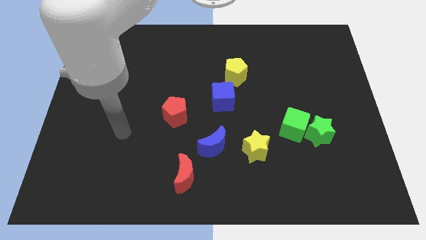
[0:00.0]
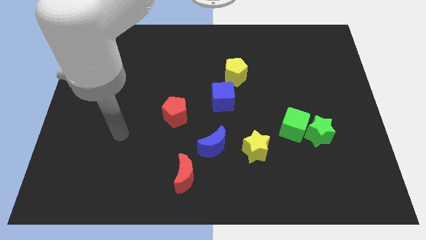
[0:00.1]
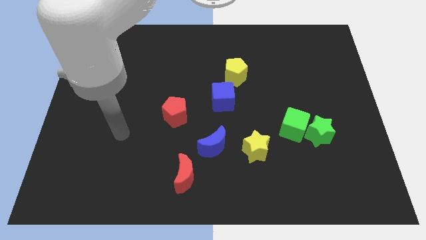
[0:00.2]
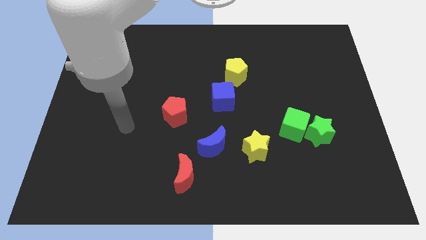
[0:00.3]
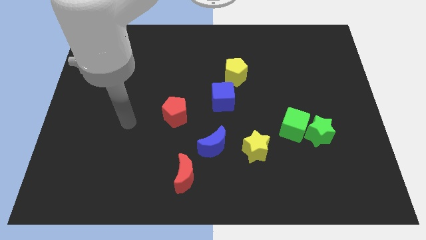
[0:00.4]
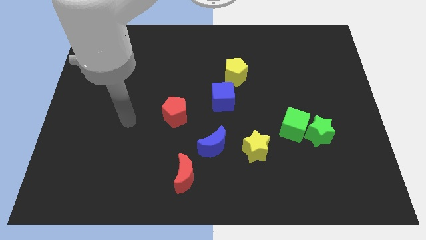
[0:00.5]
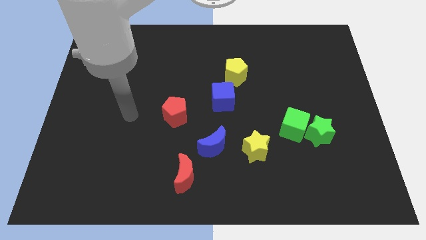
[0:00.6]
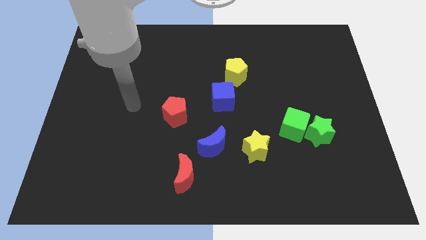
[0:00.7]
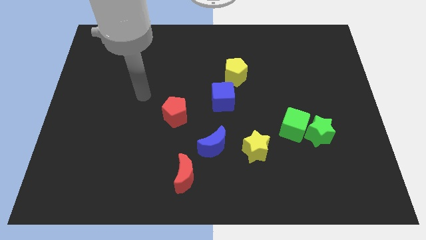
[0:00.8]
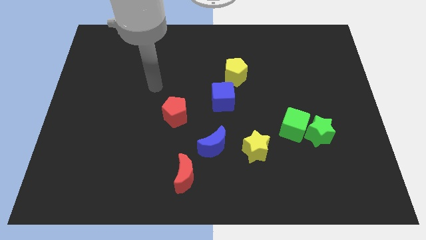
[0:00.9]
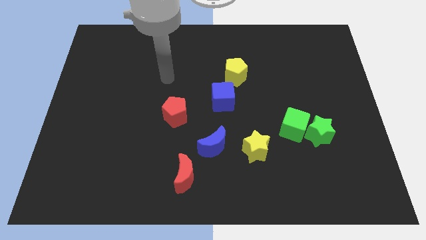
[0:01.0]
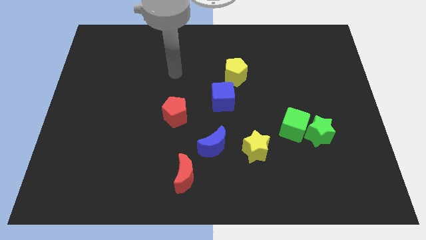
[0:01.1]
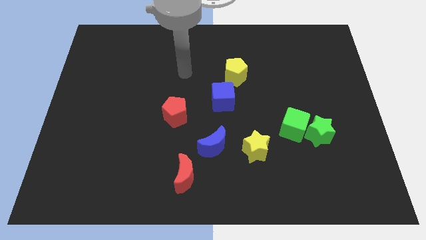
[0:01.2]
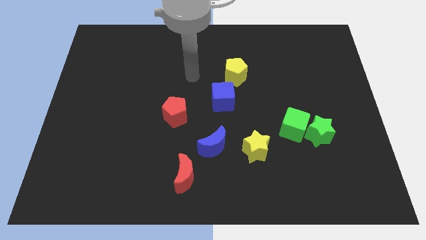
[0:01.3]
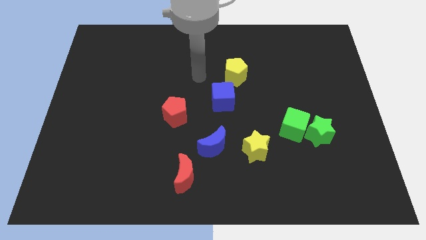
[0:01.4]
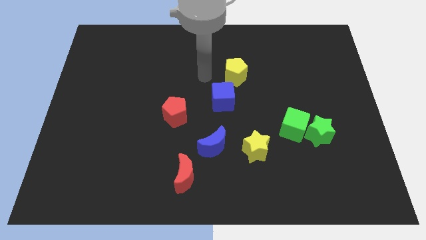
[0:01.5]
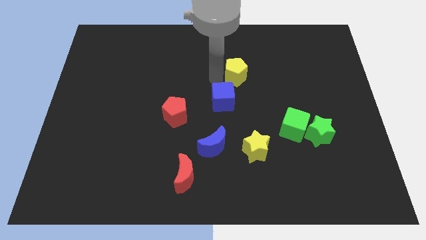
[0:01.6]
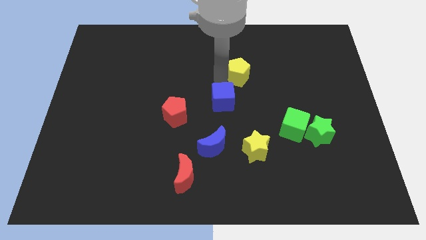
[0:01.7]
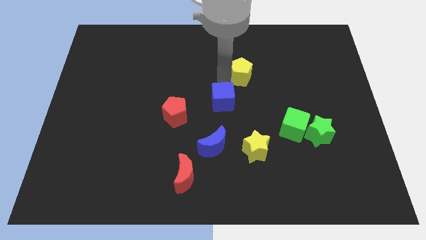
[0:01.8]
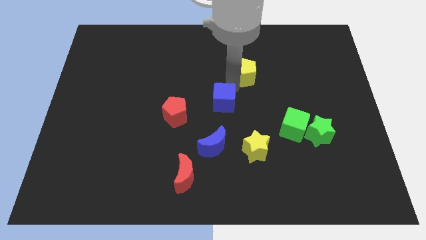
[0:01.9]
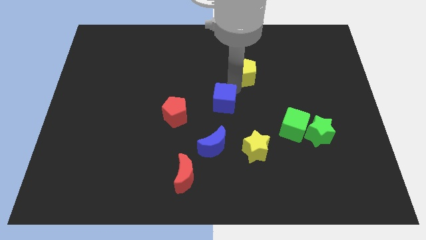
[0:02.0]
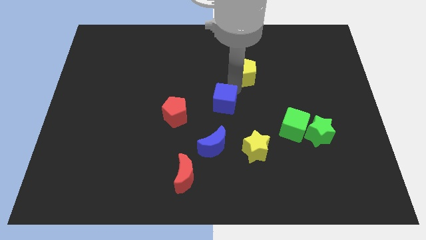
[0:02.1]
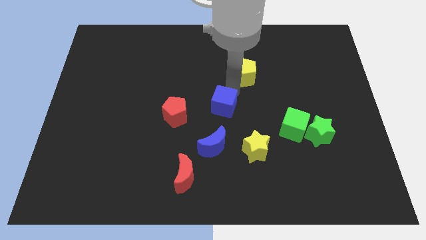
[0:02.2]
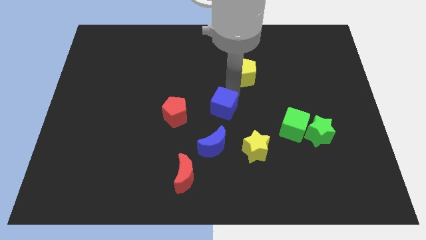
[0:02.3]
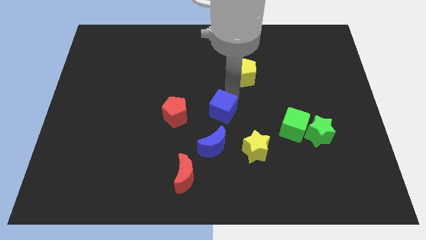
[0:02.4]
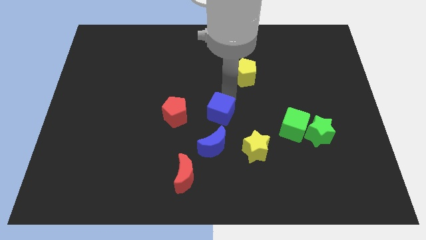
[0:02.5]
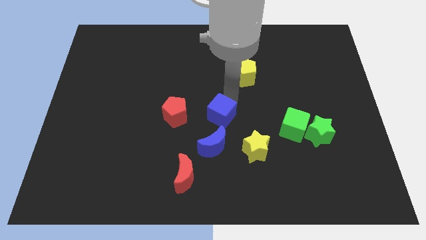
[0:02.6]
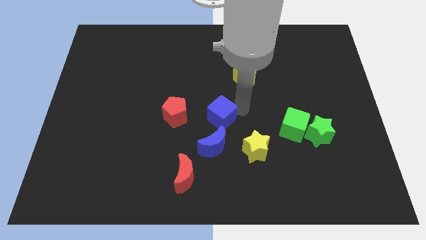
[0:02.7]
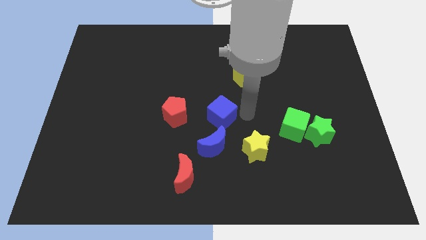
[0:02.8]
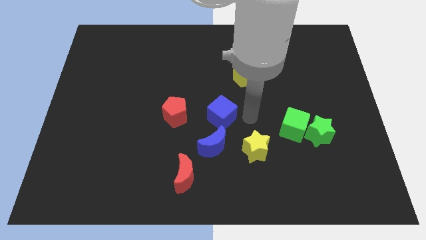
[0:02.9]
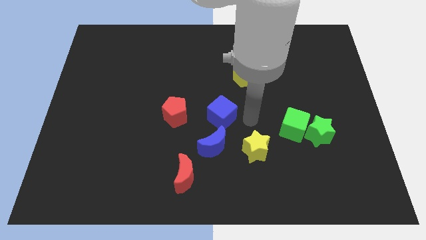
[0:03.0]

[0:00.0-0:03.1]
separate the blue cube and yellow pentagon

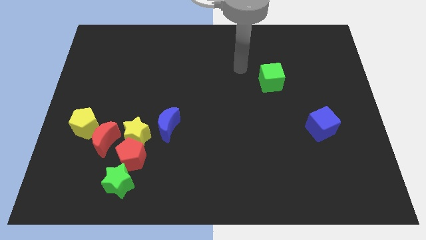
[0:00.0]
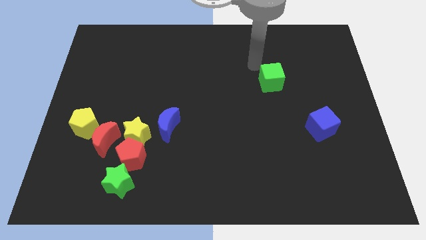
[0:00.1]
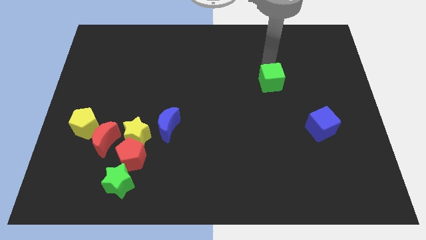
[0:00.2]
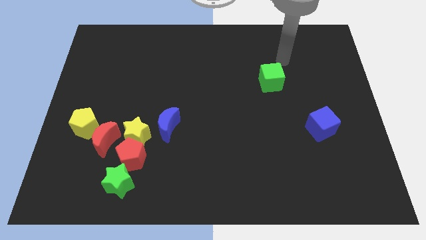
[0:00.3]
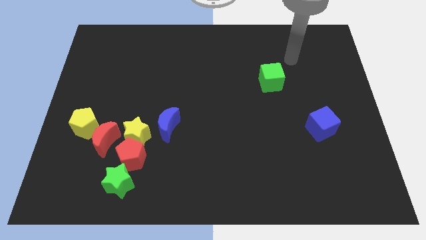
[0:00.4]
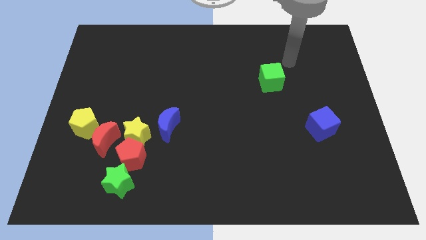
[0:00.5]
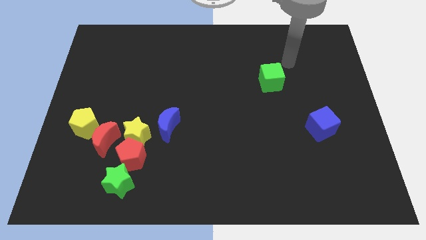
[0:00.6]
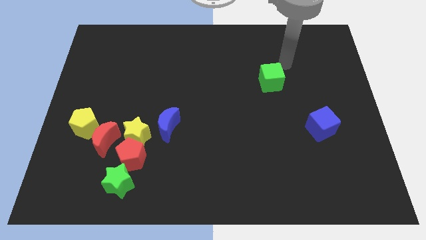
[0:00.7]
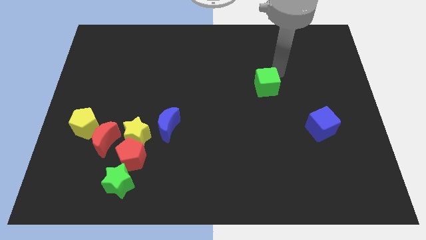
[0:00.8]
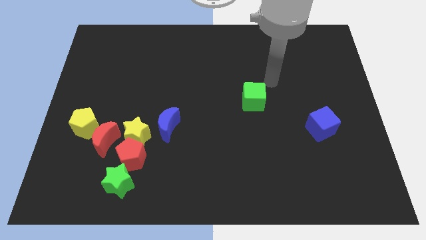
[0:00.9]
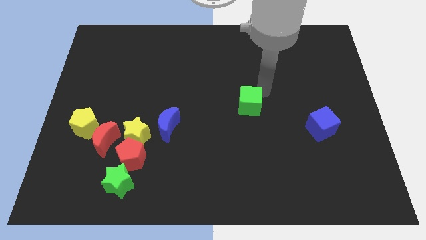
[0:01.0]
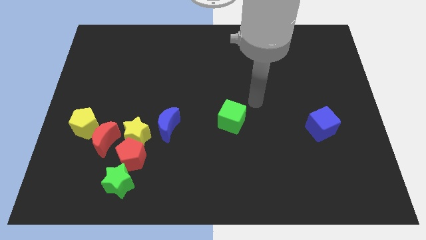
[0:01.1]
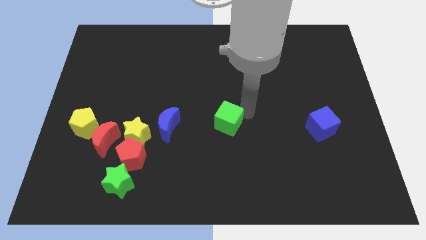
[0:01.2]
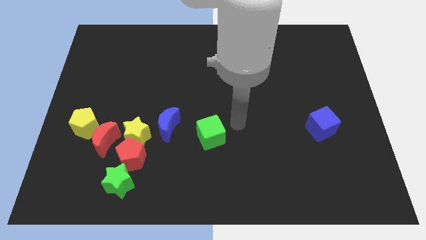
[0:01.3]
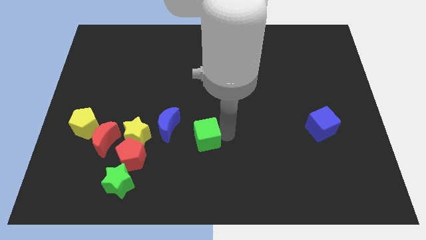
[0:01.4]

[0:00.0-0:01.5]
move green cube towards the blue crescent

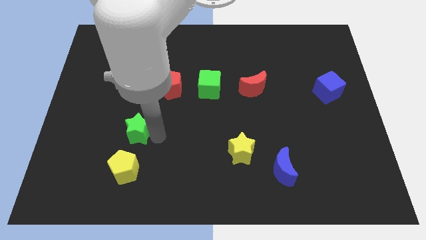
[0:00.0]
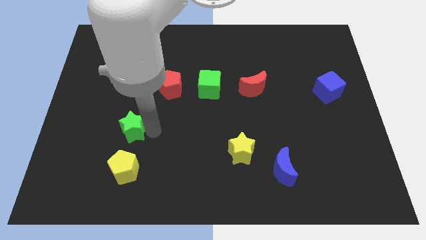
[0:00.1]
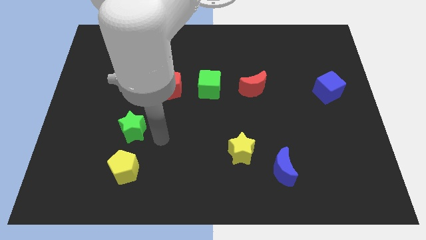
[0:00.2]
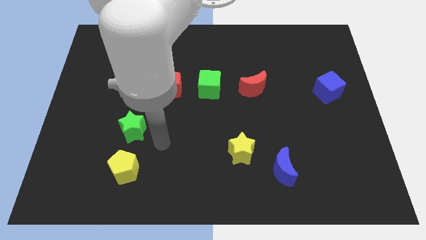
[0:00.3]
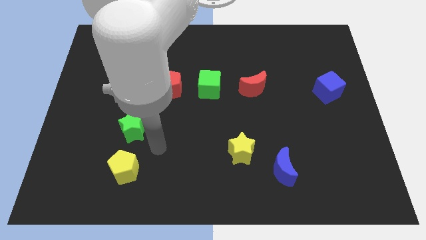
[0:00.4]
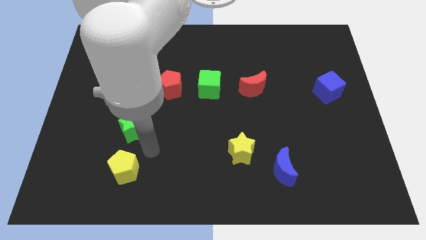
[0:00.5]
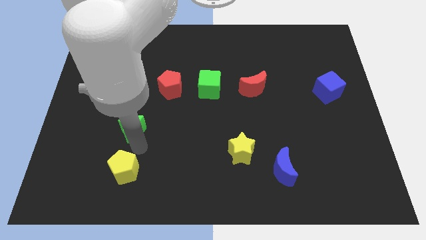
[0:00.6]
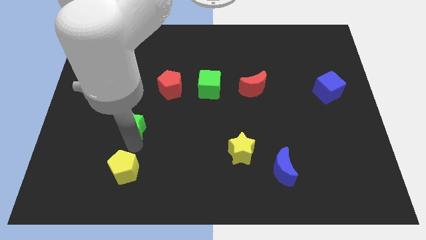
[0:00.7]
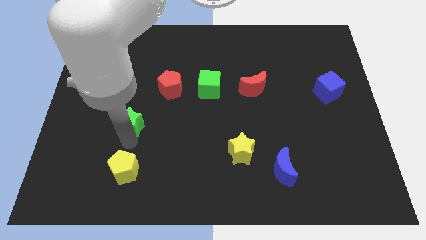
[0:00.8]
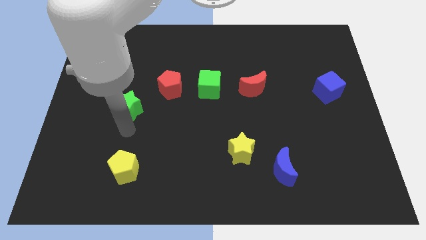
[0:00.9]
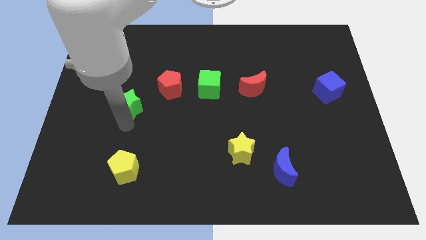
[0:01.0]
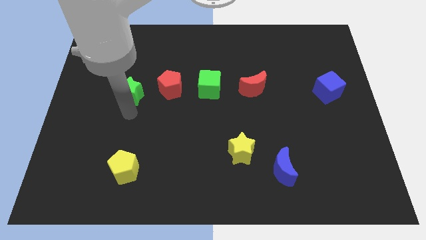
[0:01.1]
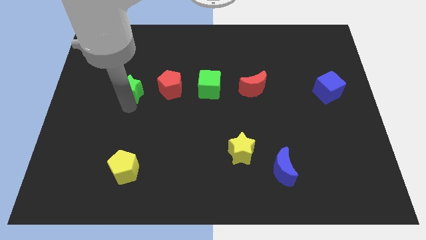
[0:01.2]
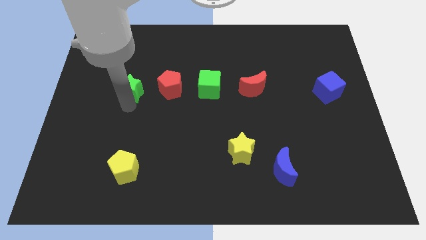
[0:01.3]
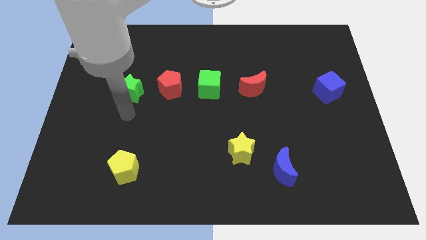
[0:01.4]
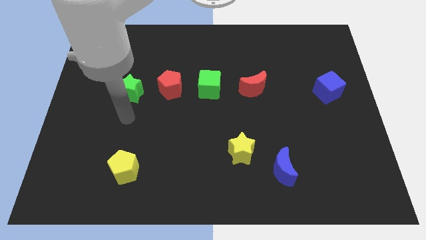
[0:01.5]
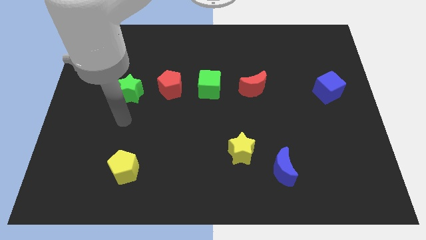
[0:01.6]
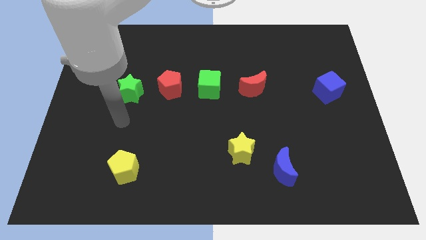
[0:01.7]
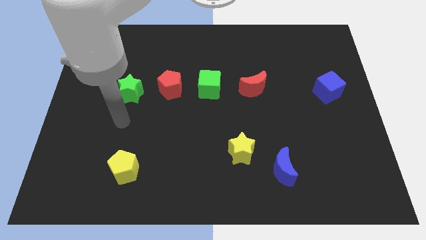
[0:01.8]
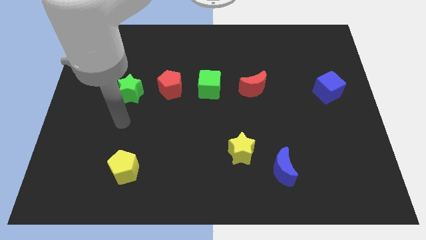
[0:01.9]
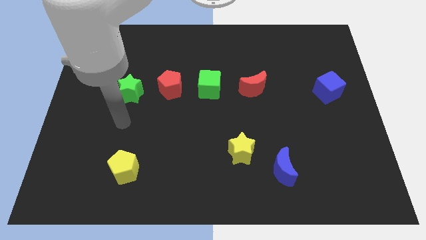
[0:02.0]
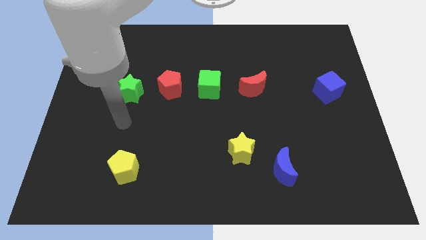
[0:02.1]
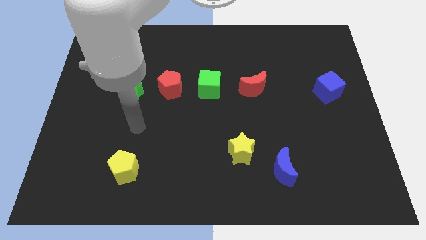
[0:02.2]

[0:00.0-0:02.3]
place green star to the left of red pentagon

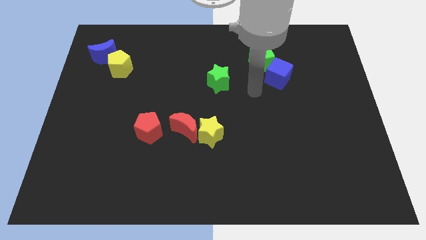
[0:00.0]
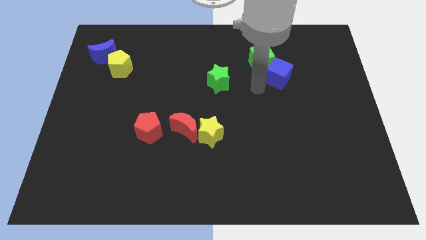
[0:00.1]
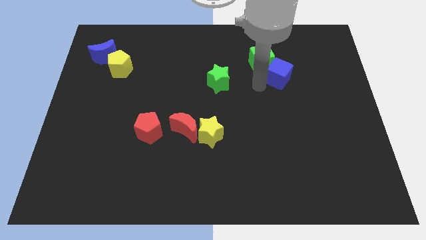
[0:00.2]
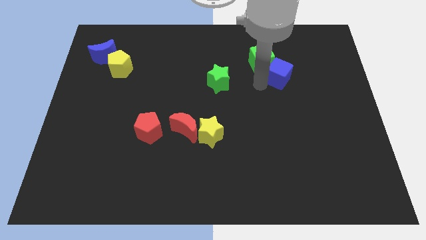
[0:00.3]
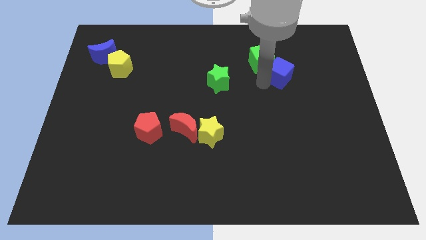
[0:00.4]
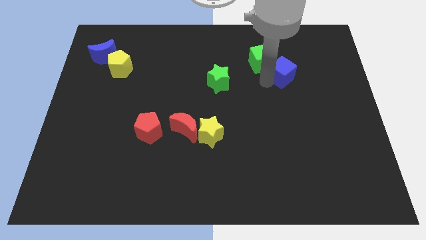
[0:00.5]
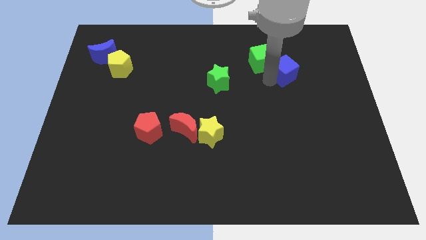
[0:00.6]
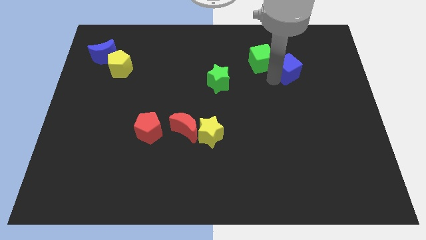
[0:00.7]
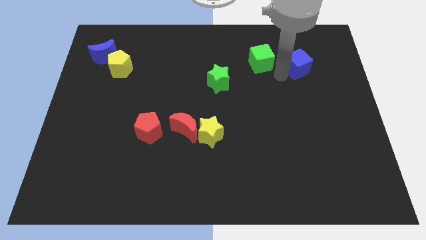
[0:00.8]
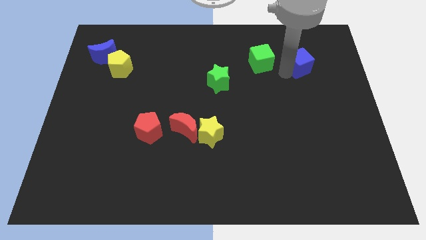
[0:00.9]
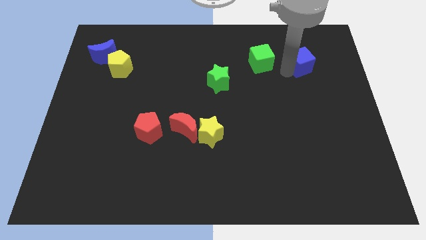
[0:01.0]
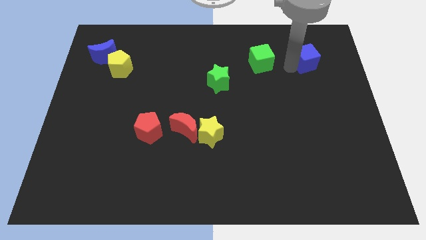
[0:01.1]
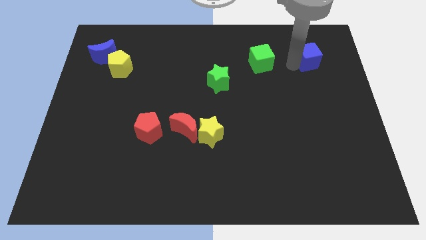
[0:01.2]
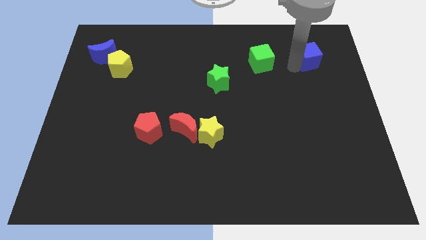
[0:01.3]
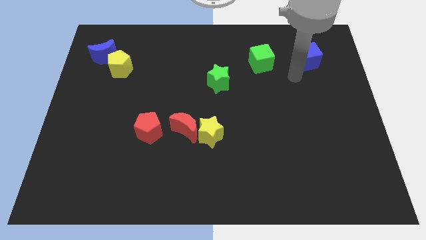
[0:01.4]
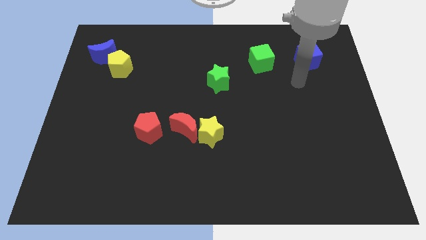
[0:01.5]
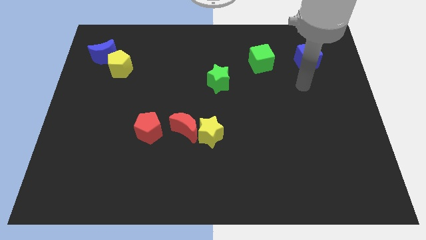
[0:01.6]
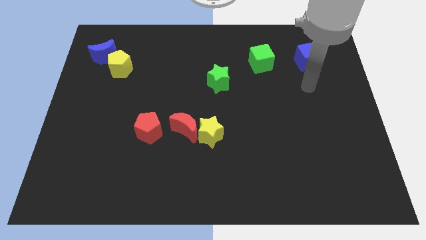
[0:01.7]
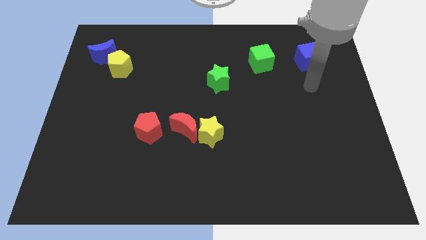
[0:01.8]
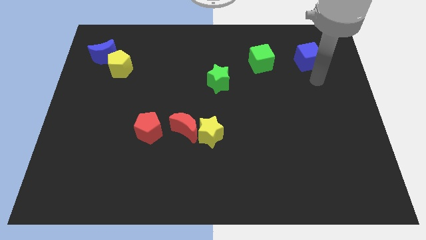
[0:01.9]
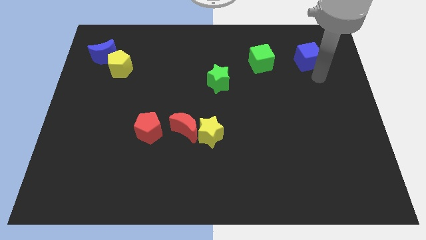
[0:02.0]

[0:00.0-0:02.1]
separate blue cube from the green cube
